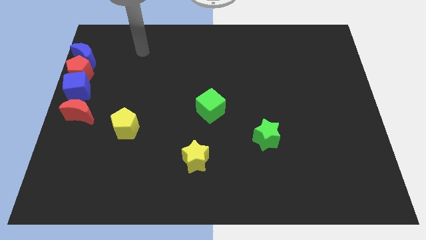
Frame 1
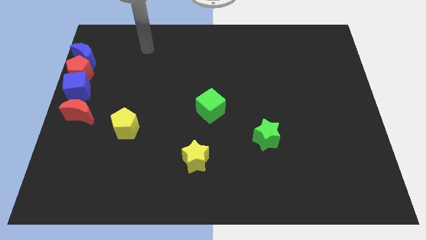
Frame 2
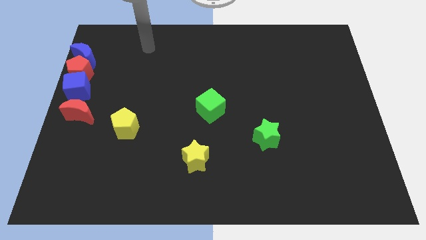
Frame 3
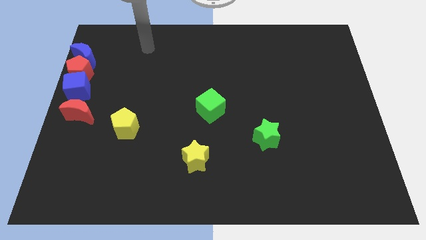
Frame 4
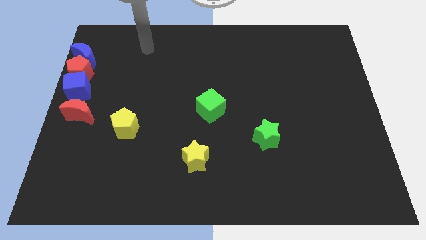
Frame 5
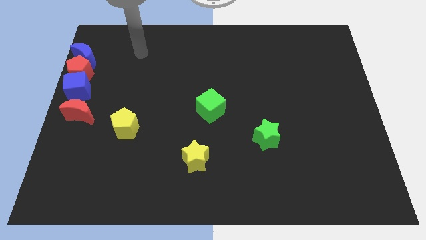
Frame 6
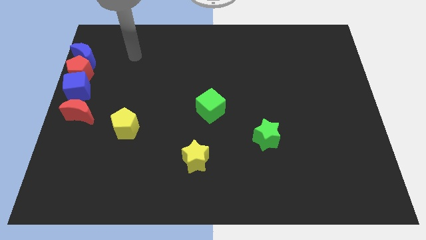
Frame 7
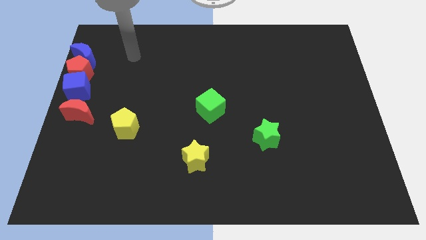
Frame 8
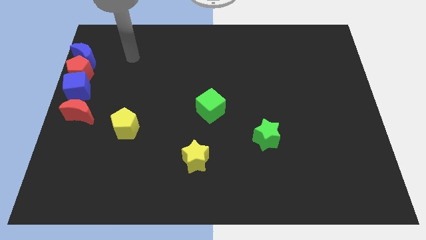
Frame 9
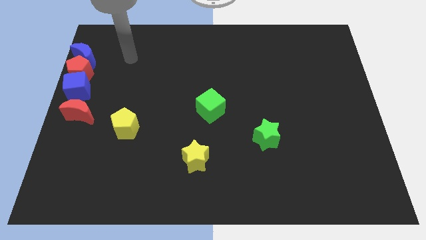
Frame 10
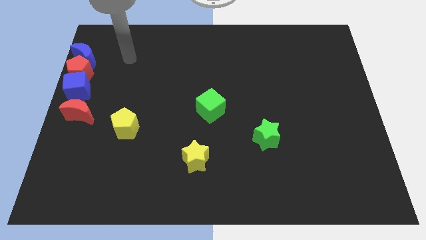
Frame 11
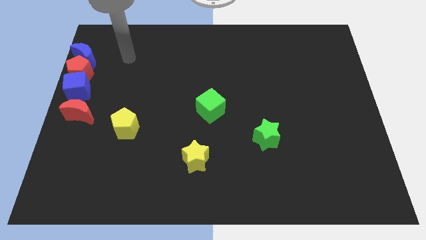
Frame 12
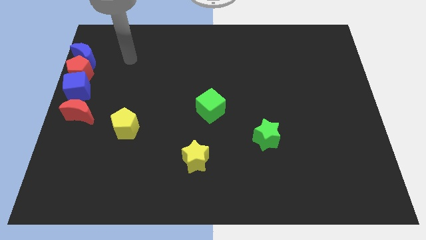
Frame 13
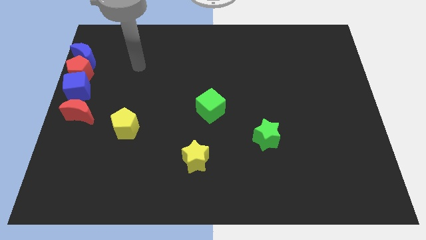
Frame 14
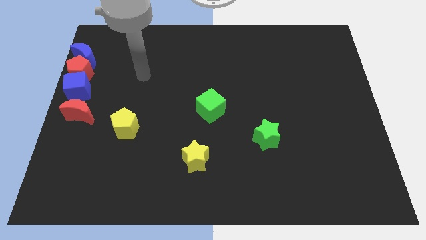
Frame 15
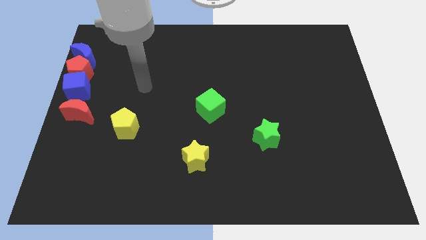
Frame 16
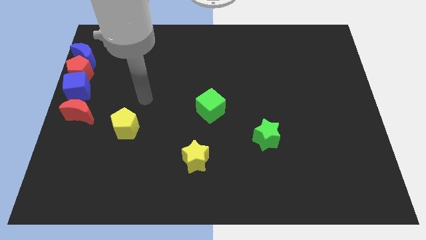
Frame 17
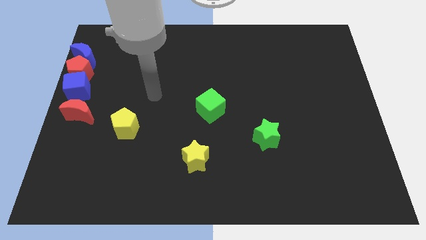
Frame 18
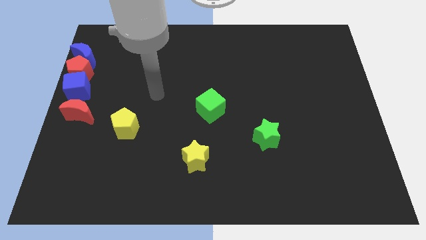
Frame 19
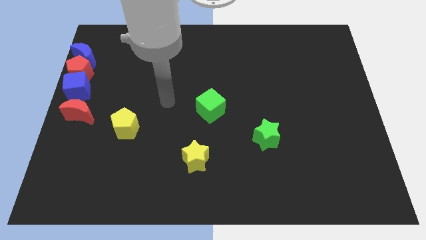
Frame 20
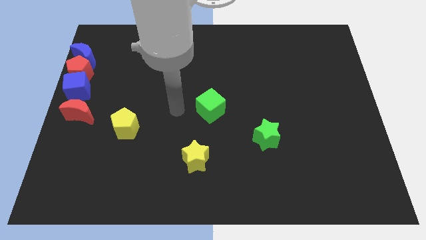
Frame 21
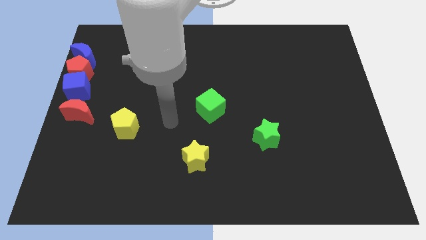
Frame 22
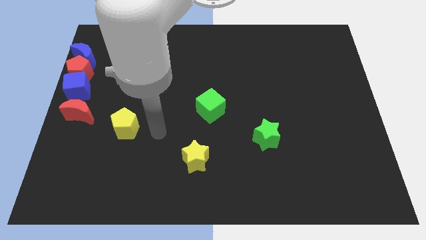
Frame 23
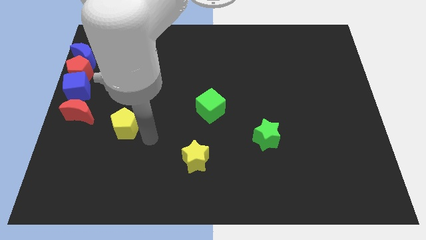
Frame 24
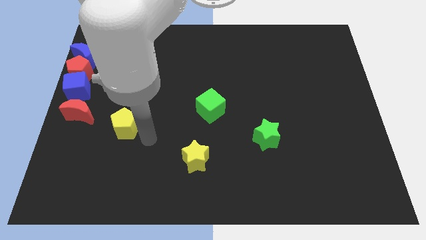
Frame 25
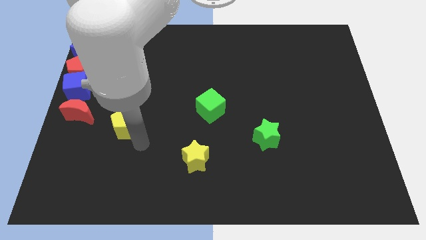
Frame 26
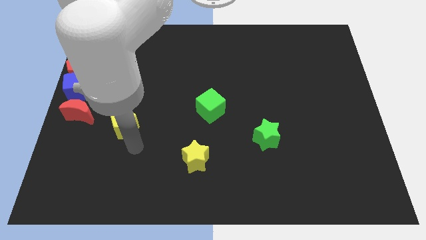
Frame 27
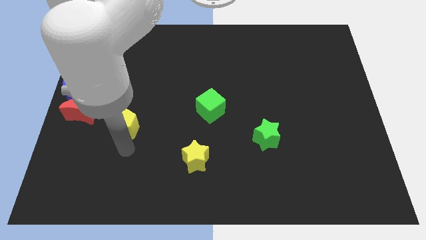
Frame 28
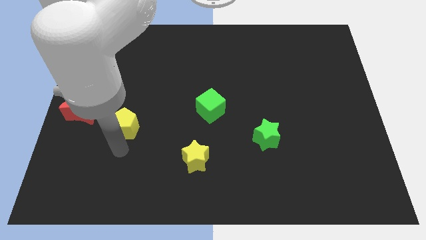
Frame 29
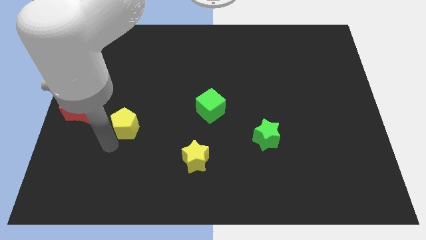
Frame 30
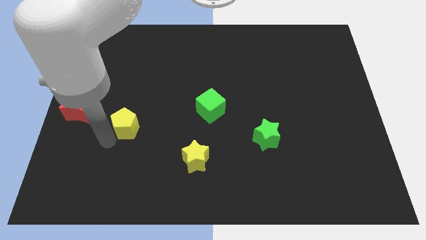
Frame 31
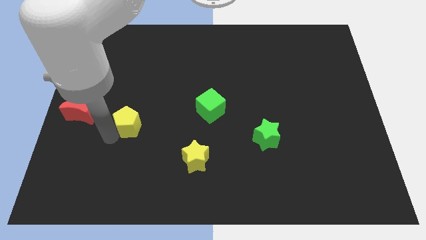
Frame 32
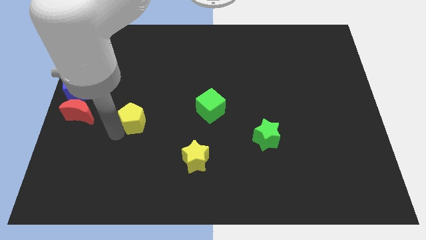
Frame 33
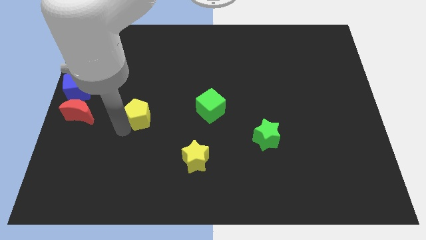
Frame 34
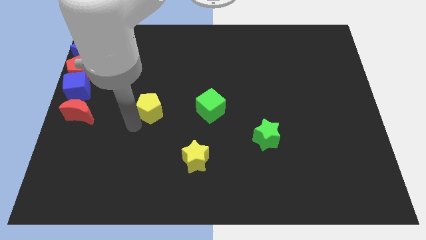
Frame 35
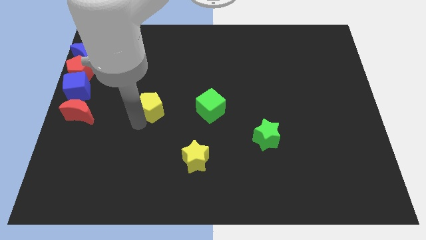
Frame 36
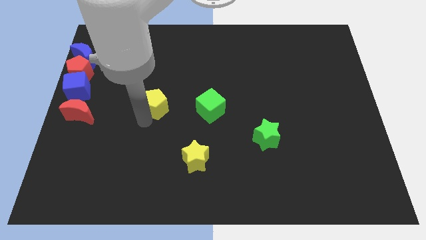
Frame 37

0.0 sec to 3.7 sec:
push the yellow pentagon parallel to the left of the green cube

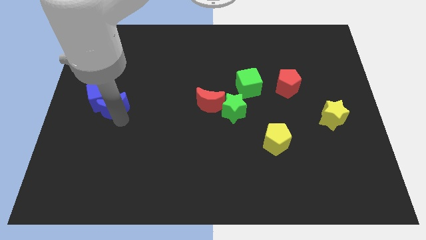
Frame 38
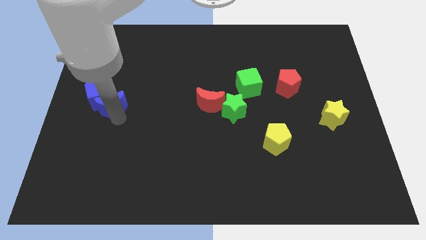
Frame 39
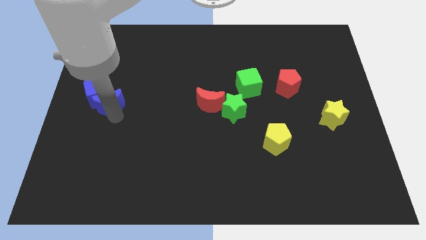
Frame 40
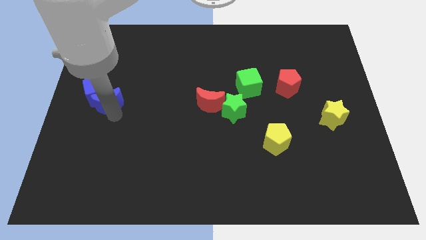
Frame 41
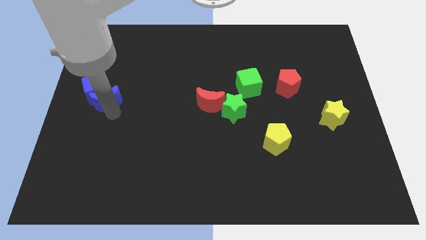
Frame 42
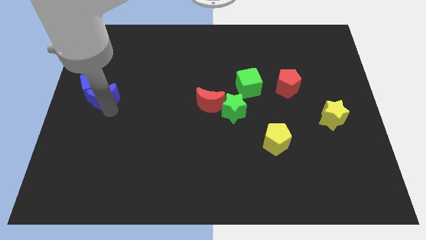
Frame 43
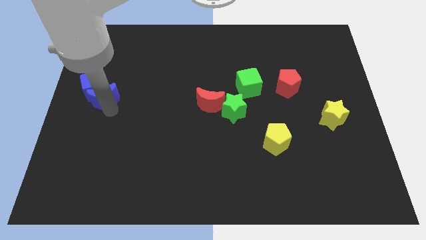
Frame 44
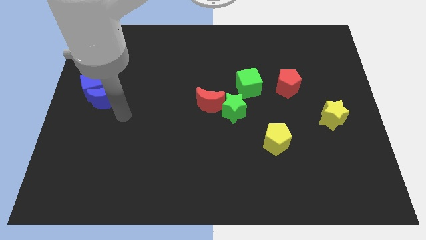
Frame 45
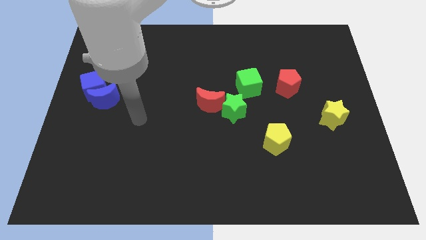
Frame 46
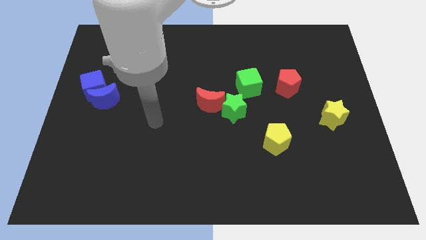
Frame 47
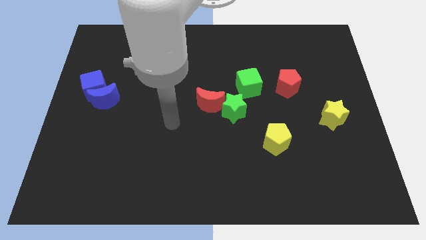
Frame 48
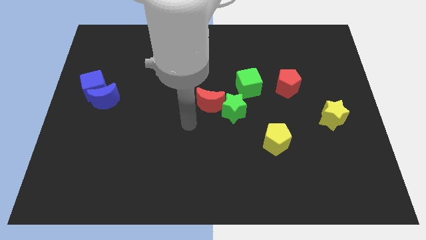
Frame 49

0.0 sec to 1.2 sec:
push the blue moon into the blue cube

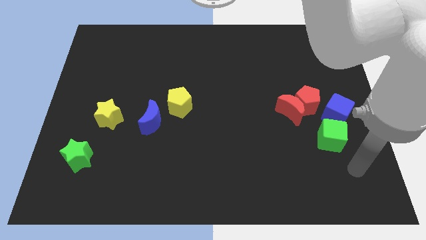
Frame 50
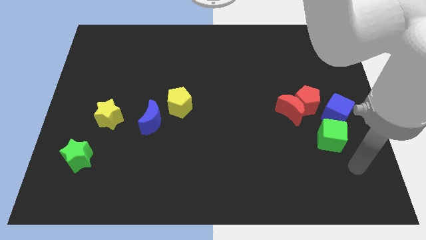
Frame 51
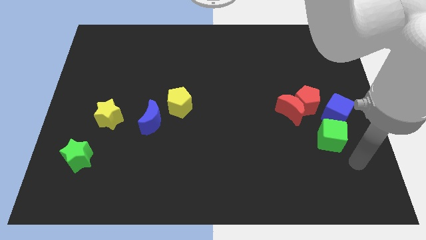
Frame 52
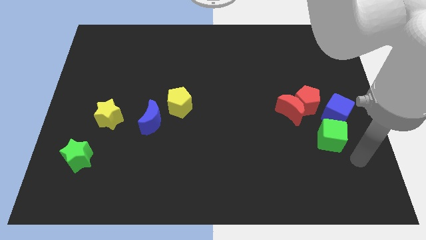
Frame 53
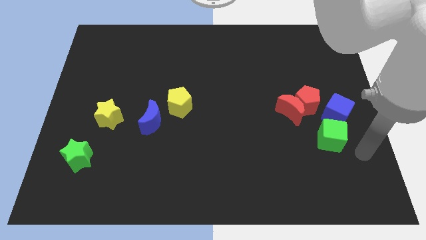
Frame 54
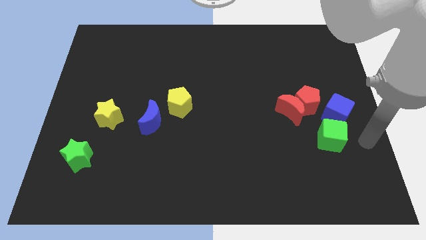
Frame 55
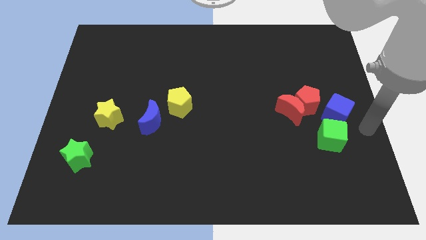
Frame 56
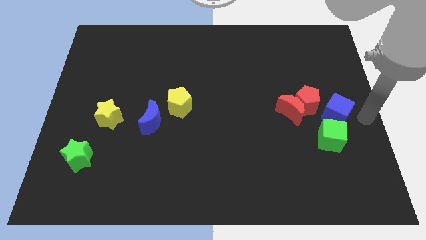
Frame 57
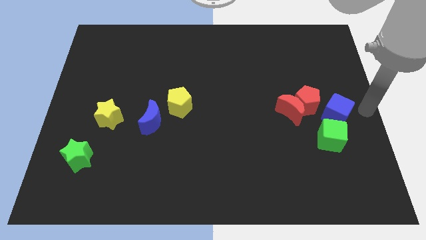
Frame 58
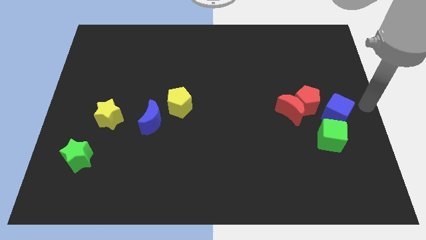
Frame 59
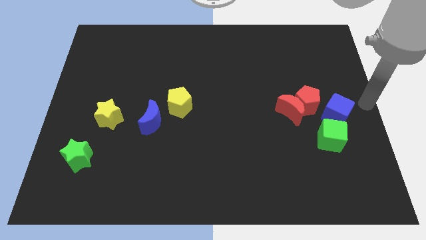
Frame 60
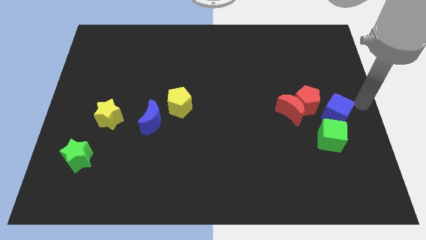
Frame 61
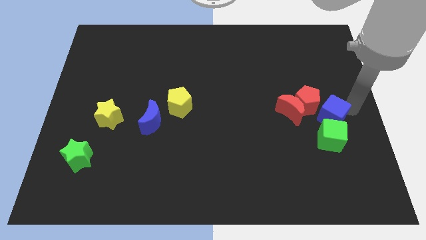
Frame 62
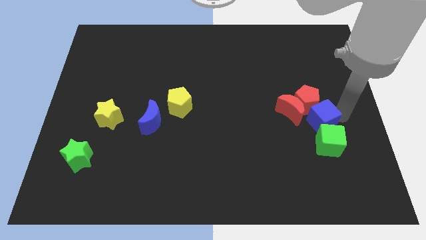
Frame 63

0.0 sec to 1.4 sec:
place the blue cube in between the red pentagon and the green cube

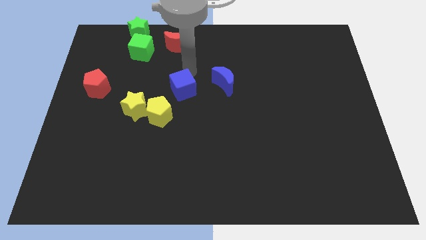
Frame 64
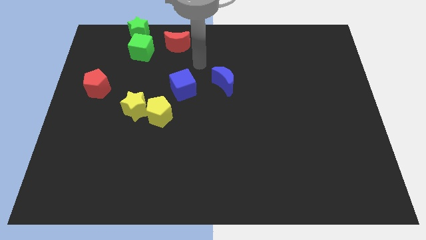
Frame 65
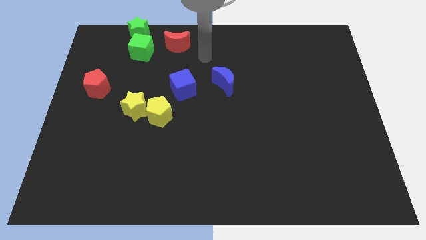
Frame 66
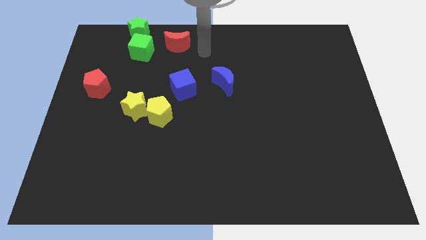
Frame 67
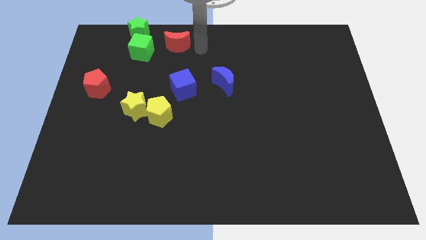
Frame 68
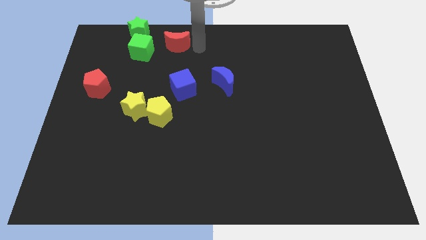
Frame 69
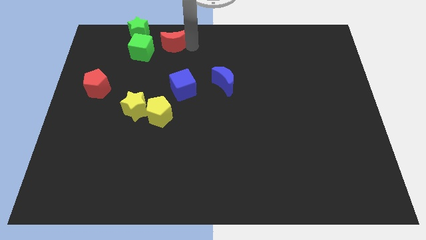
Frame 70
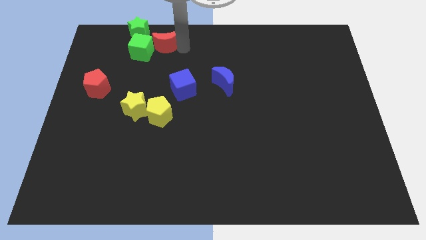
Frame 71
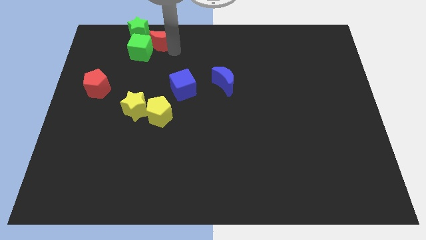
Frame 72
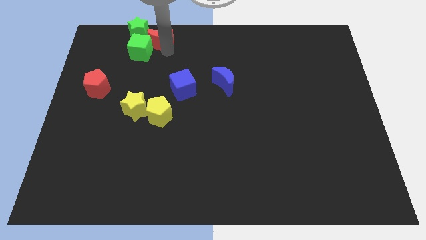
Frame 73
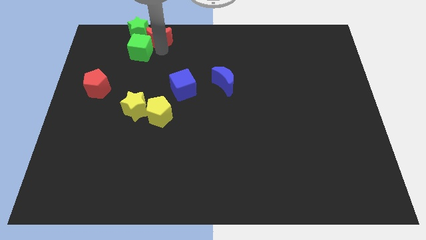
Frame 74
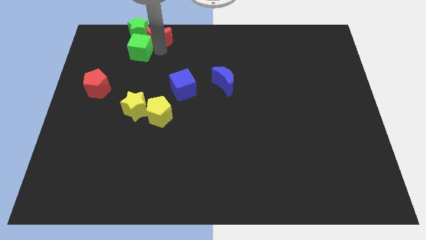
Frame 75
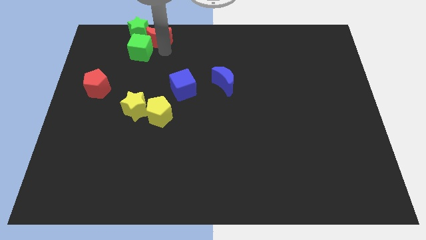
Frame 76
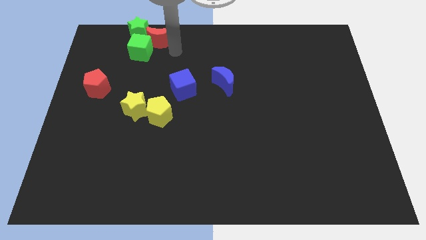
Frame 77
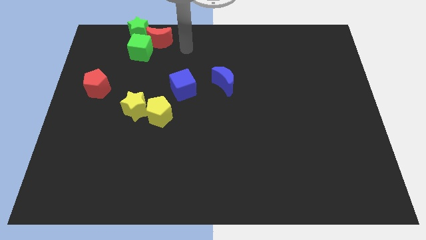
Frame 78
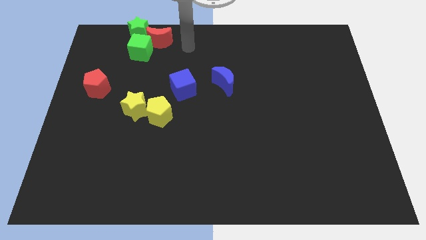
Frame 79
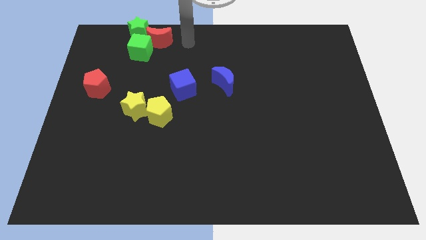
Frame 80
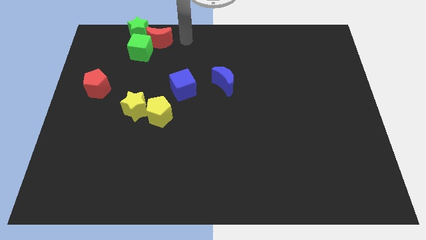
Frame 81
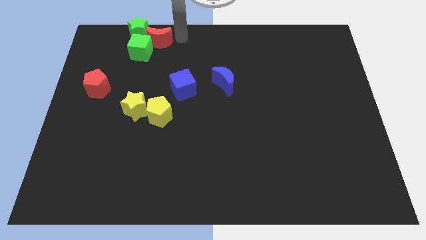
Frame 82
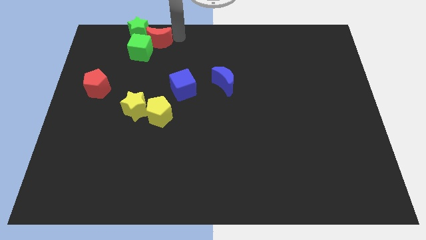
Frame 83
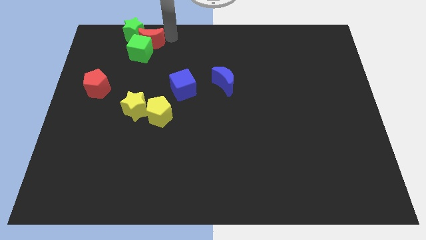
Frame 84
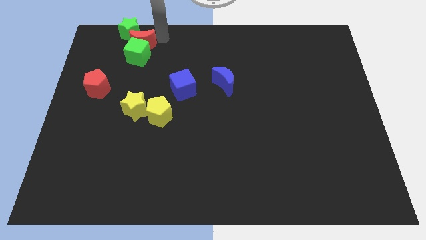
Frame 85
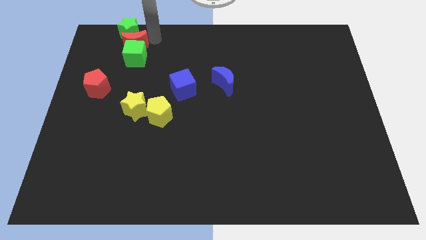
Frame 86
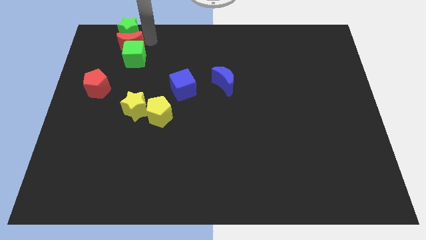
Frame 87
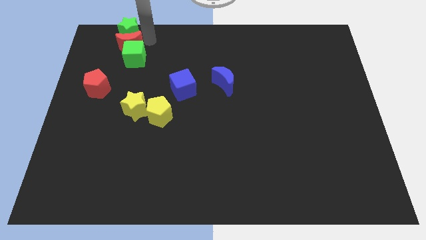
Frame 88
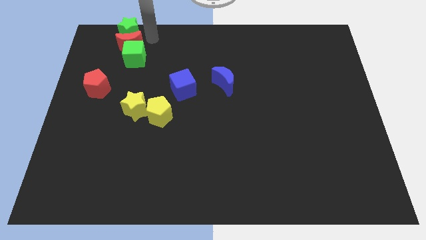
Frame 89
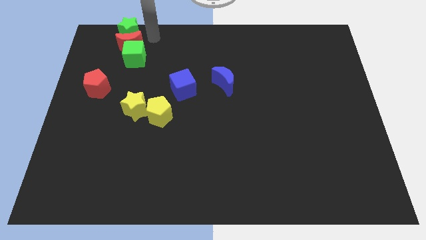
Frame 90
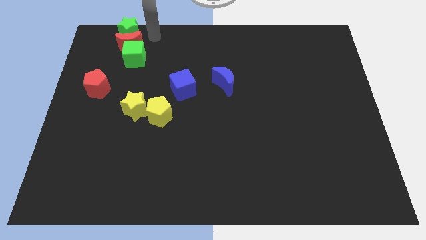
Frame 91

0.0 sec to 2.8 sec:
place the red crescent in between the two green blocks
